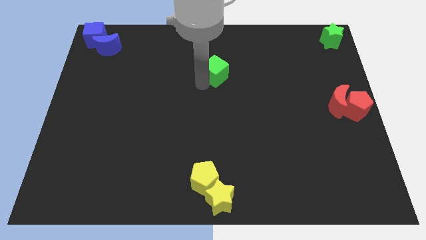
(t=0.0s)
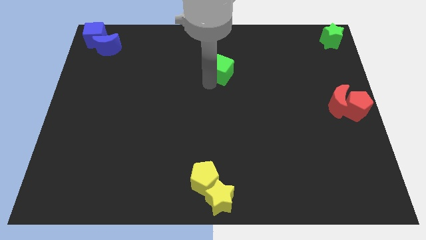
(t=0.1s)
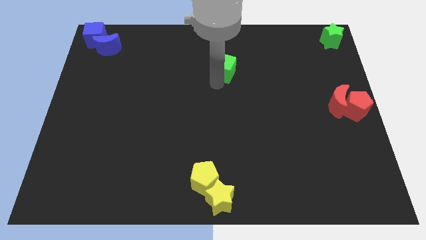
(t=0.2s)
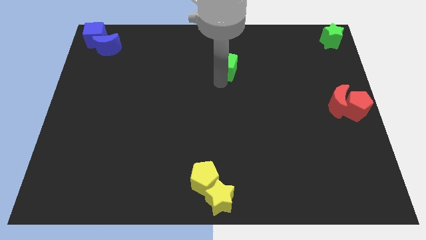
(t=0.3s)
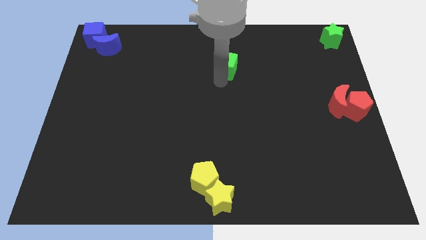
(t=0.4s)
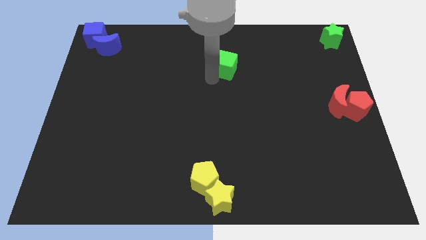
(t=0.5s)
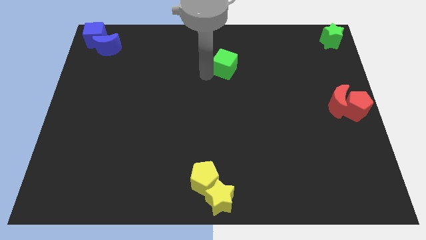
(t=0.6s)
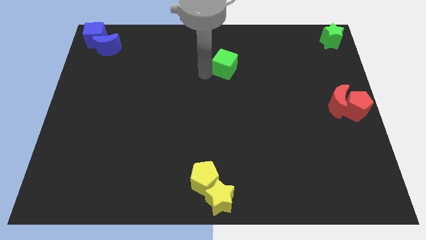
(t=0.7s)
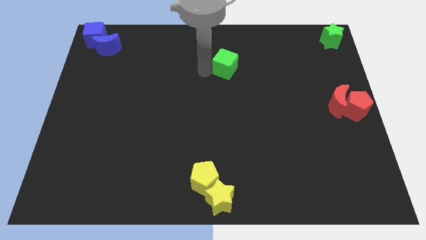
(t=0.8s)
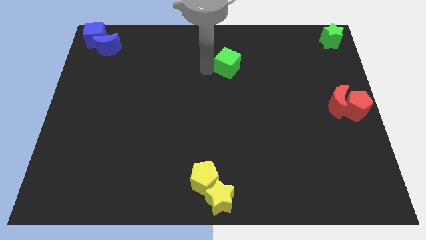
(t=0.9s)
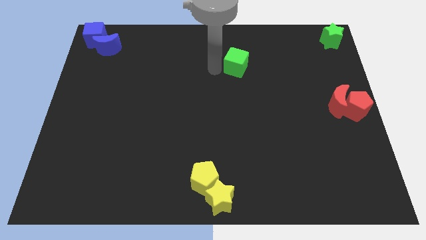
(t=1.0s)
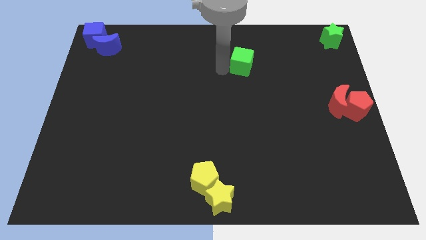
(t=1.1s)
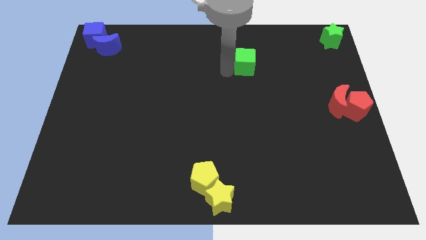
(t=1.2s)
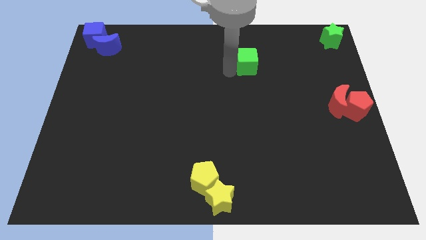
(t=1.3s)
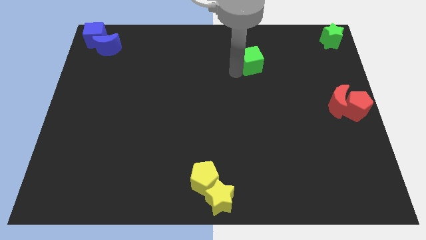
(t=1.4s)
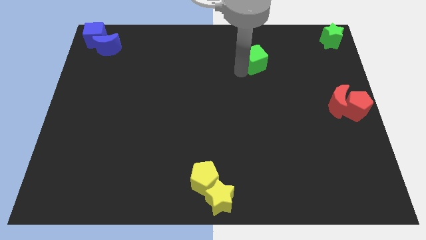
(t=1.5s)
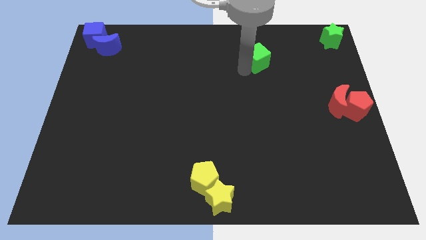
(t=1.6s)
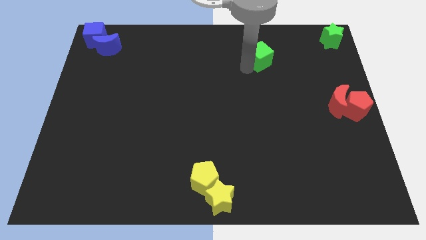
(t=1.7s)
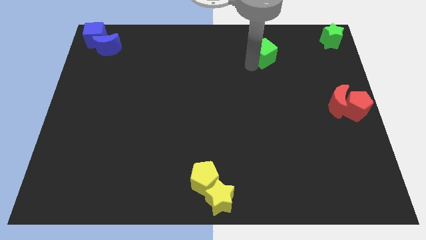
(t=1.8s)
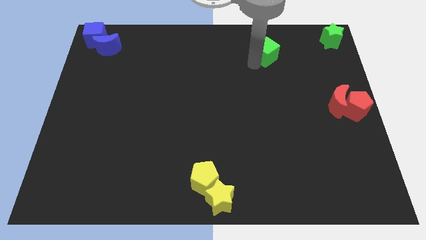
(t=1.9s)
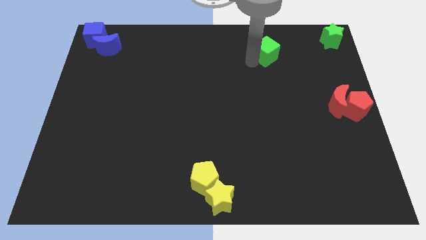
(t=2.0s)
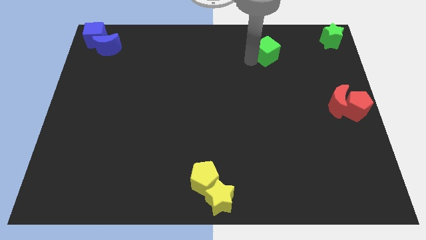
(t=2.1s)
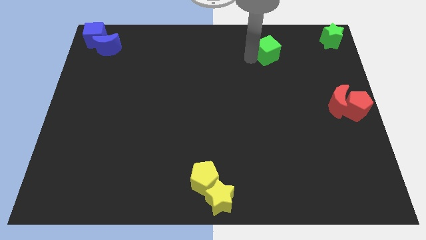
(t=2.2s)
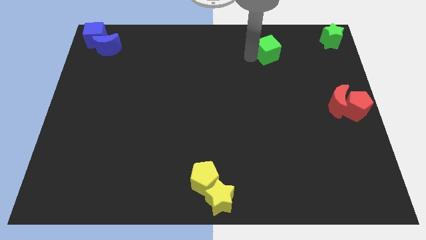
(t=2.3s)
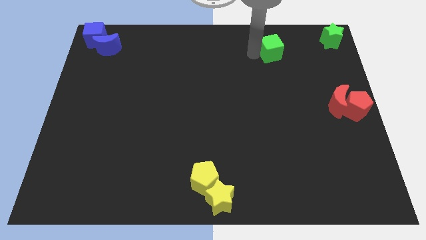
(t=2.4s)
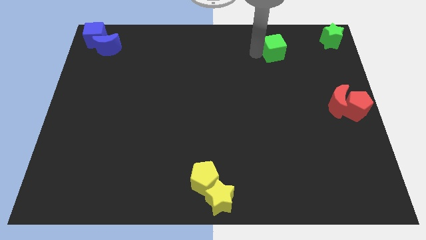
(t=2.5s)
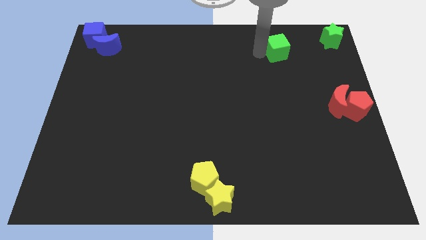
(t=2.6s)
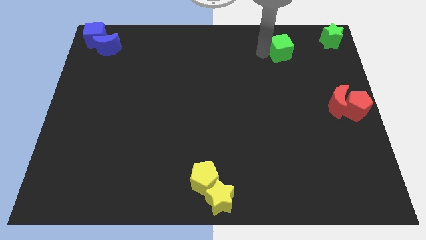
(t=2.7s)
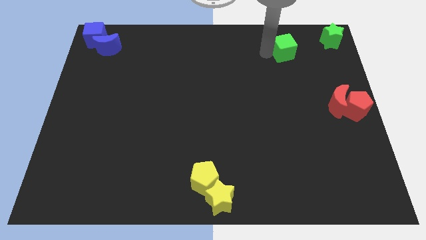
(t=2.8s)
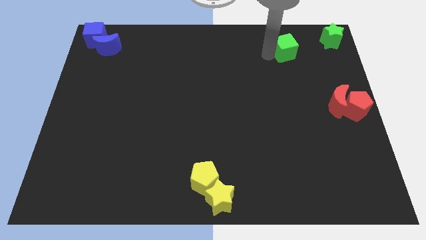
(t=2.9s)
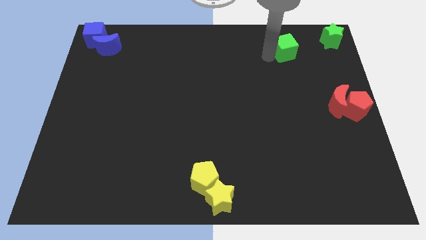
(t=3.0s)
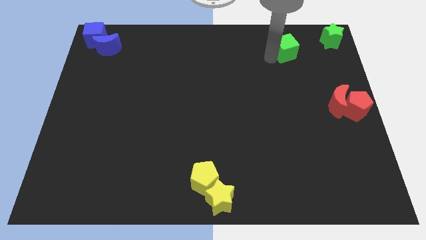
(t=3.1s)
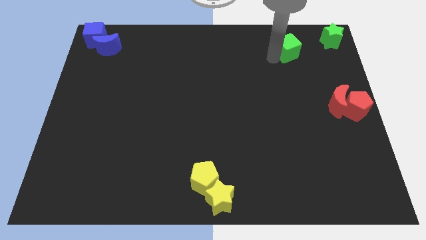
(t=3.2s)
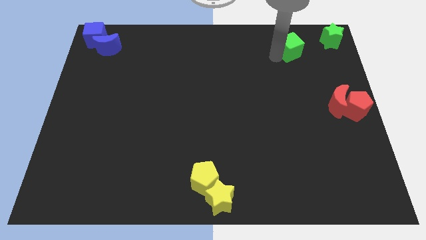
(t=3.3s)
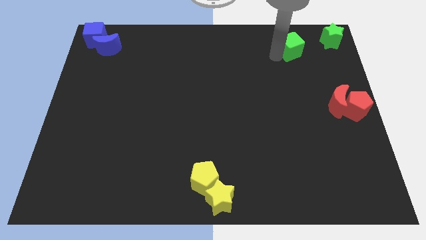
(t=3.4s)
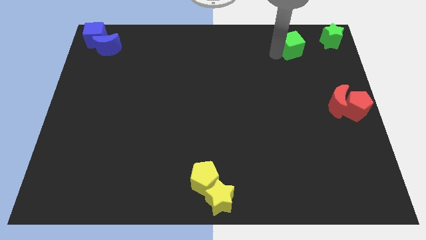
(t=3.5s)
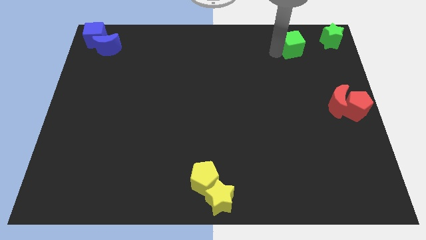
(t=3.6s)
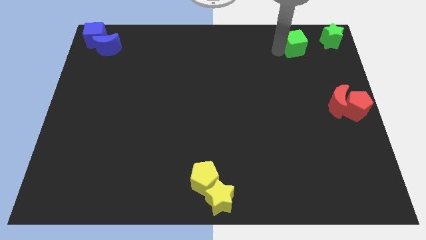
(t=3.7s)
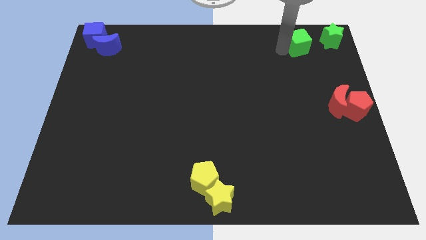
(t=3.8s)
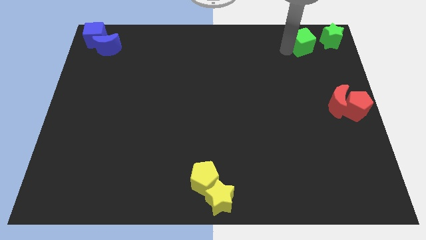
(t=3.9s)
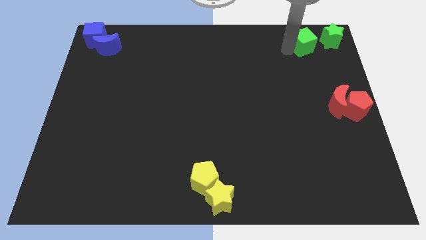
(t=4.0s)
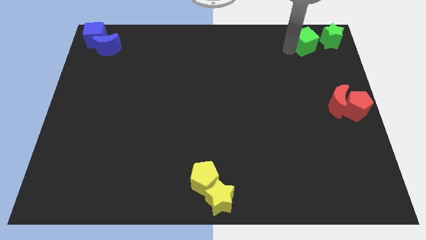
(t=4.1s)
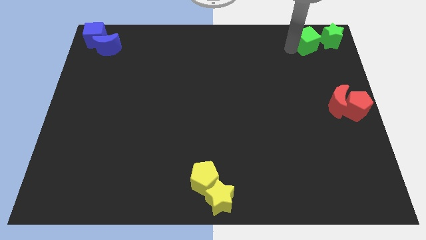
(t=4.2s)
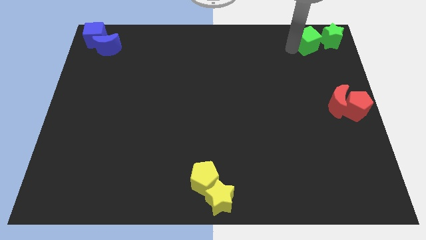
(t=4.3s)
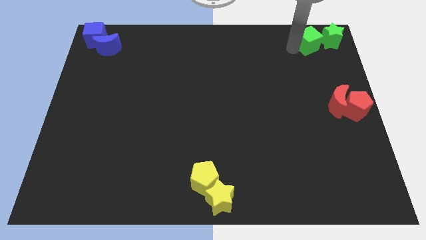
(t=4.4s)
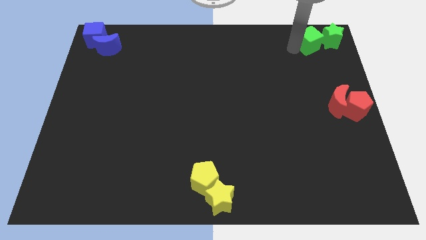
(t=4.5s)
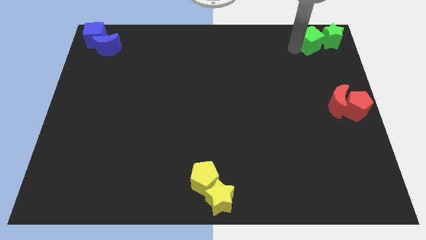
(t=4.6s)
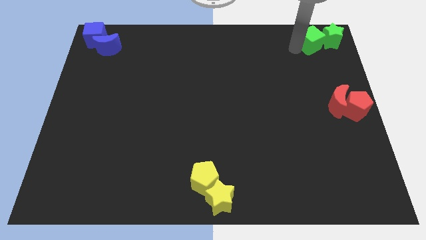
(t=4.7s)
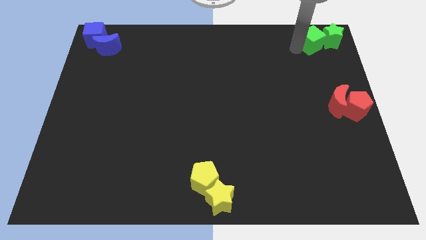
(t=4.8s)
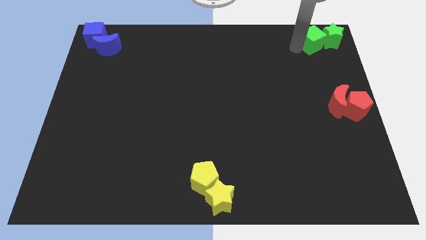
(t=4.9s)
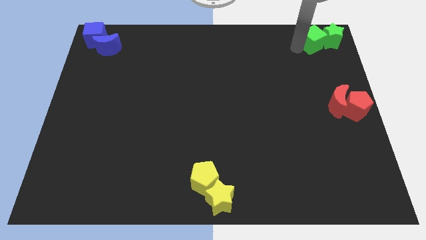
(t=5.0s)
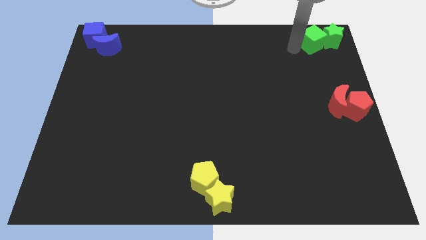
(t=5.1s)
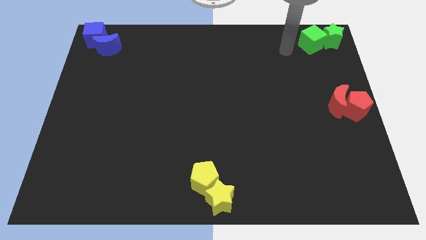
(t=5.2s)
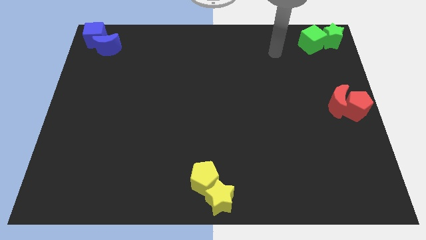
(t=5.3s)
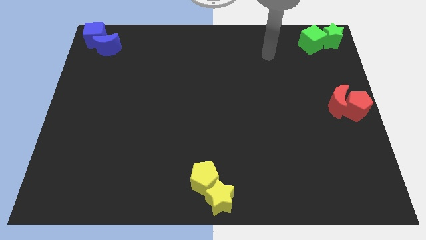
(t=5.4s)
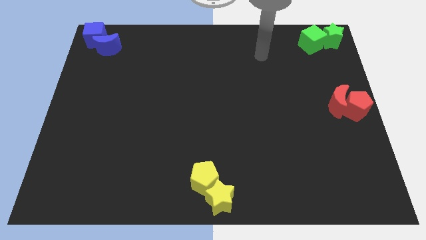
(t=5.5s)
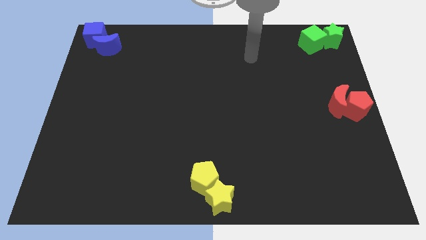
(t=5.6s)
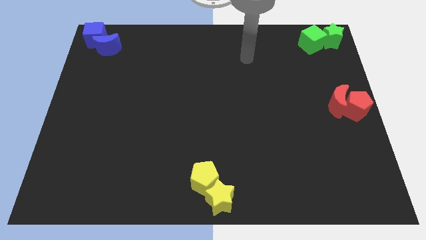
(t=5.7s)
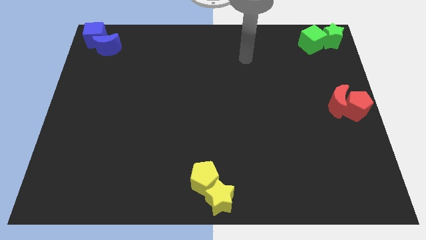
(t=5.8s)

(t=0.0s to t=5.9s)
push the green cube into the green star

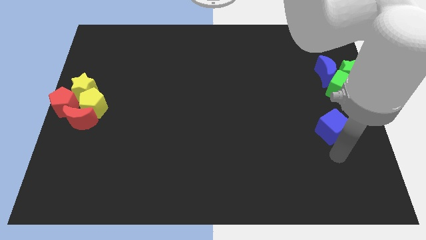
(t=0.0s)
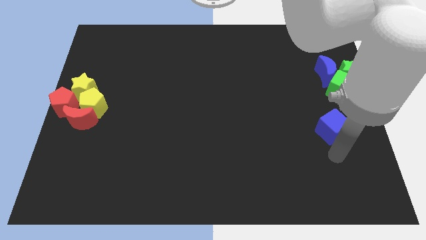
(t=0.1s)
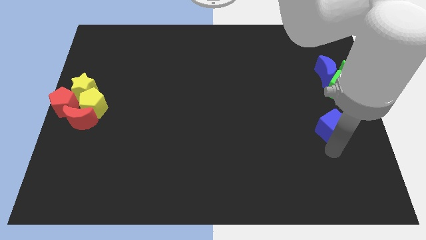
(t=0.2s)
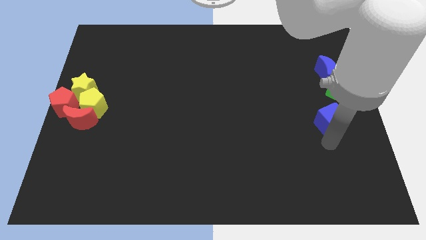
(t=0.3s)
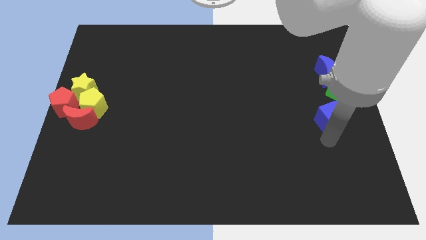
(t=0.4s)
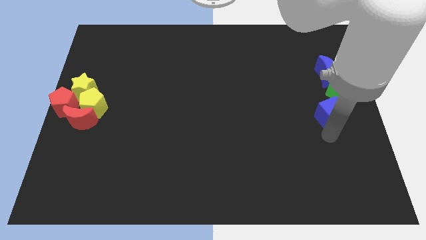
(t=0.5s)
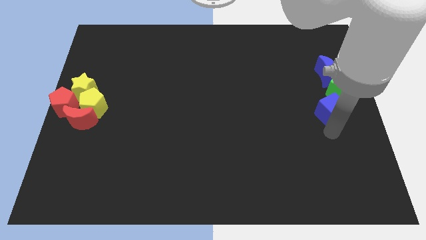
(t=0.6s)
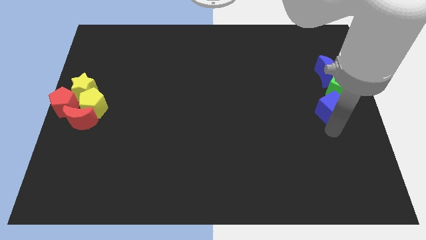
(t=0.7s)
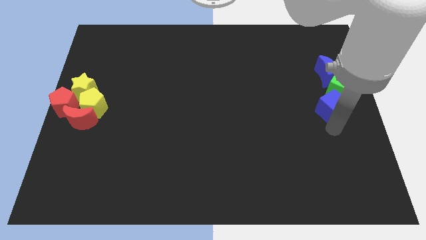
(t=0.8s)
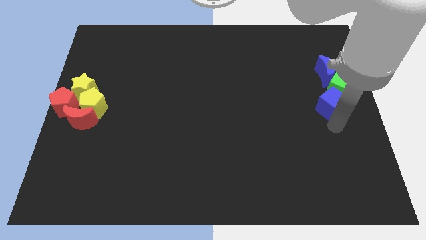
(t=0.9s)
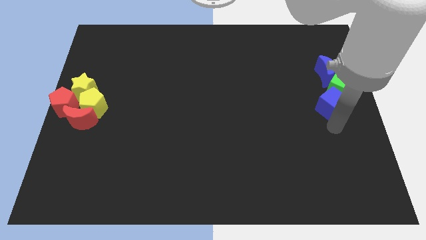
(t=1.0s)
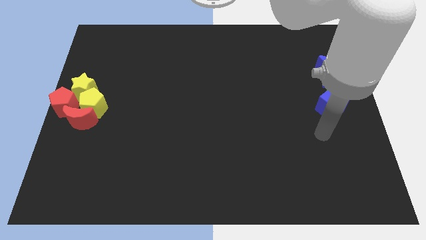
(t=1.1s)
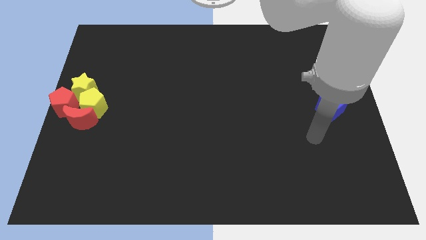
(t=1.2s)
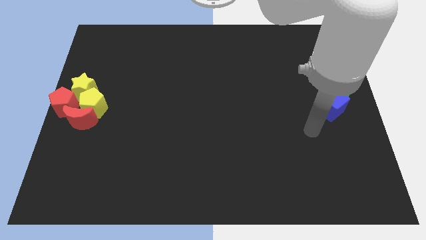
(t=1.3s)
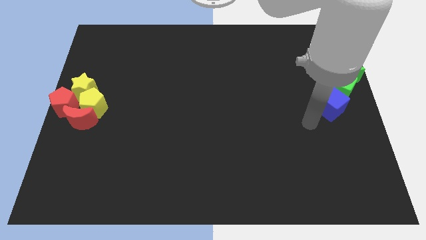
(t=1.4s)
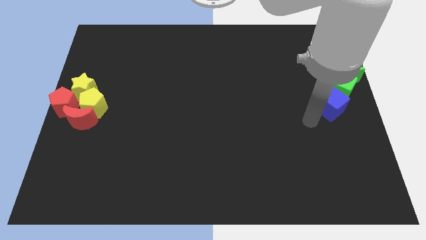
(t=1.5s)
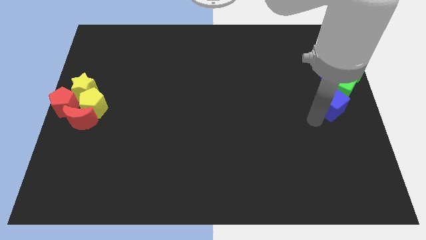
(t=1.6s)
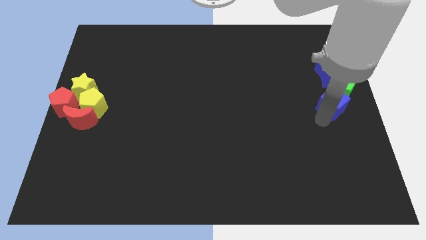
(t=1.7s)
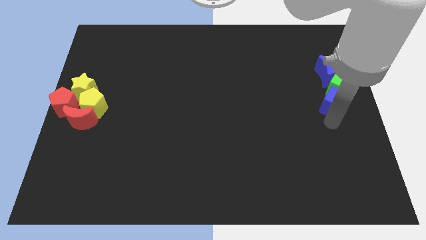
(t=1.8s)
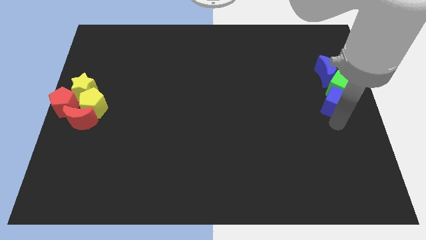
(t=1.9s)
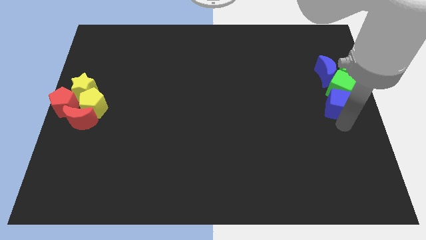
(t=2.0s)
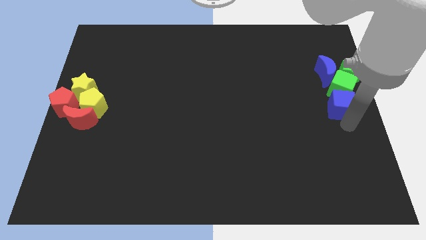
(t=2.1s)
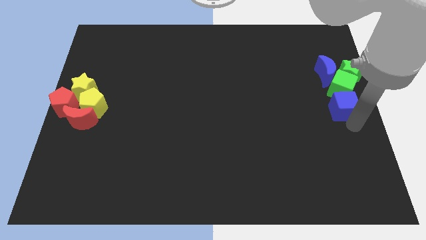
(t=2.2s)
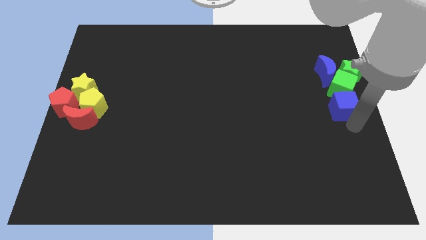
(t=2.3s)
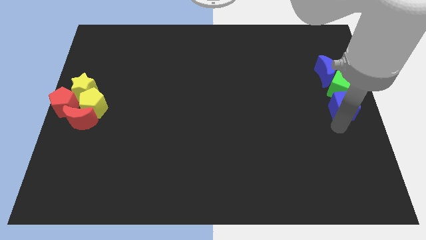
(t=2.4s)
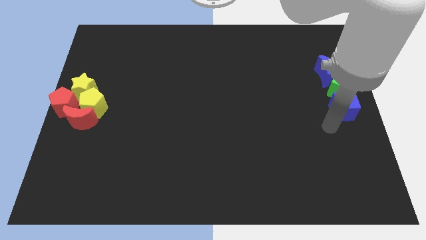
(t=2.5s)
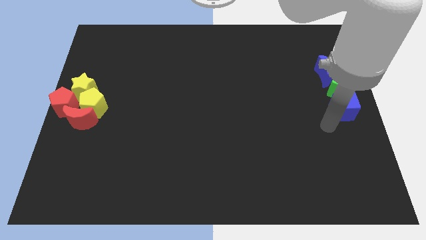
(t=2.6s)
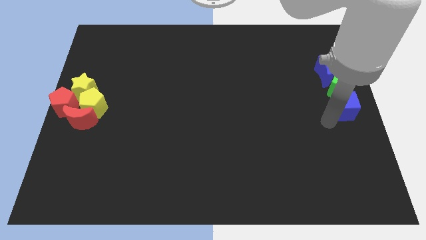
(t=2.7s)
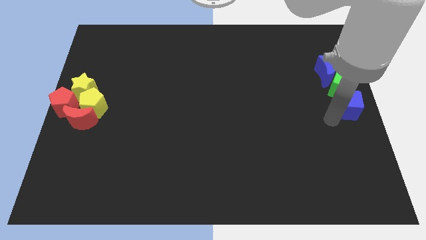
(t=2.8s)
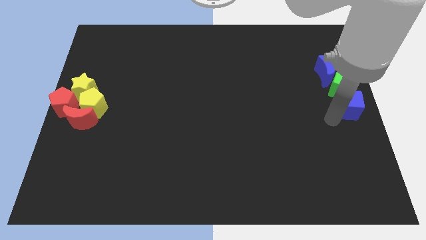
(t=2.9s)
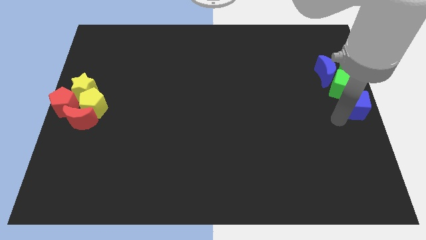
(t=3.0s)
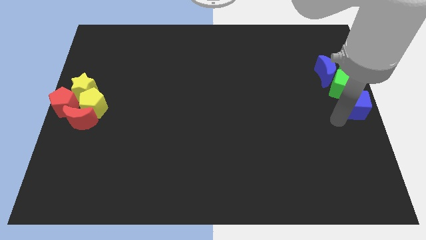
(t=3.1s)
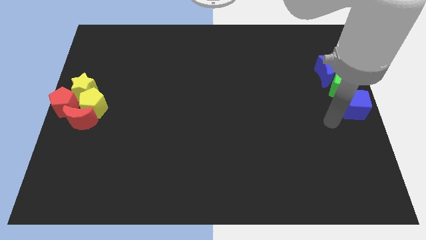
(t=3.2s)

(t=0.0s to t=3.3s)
push the blue cube into the green cube
